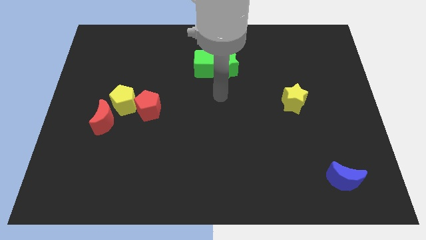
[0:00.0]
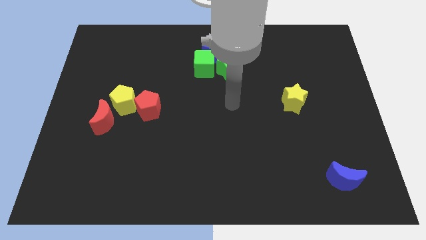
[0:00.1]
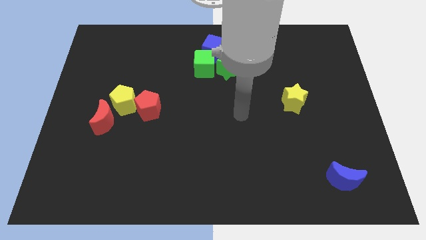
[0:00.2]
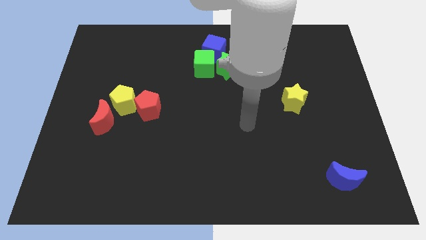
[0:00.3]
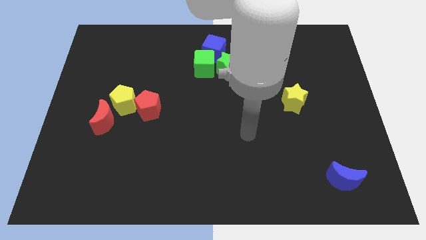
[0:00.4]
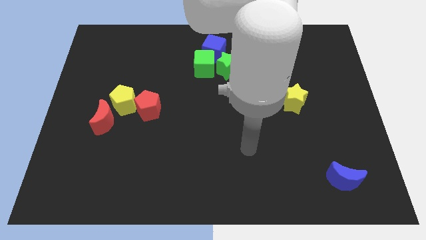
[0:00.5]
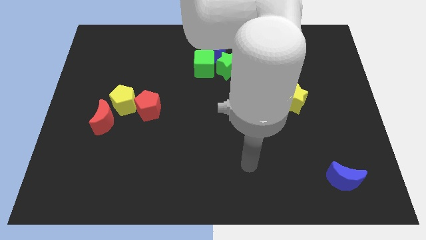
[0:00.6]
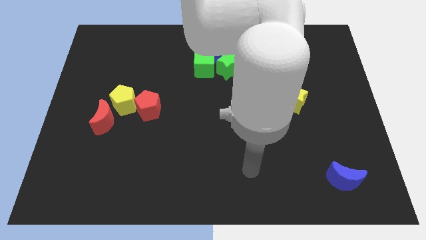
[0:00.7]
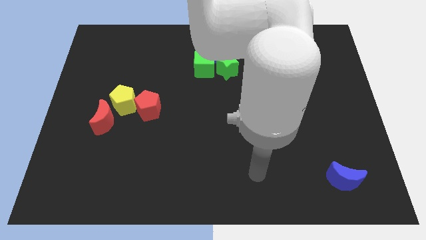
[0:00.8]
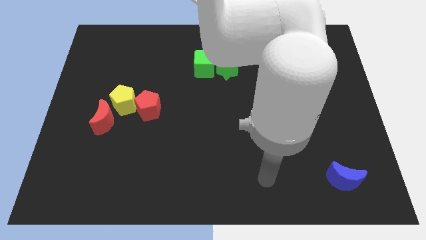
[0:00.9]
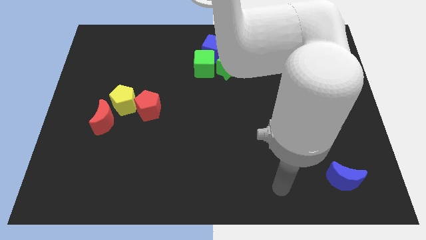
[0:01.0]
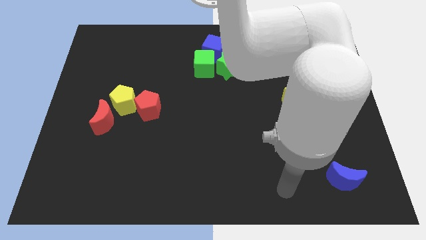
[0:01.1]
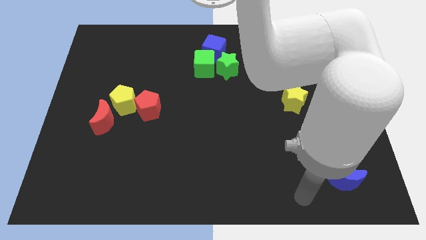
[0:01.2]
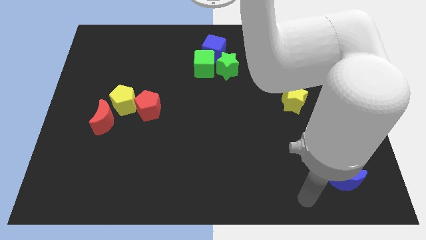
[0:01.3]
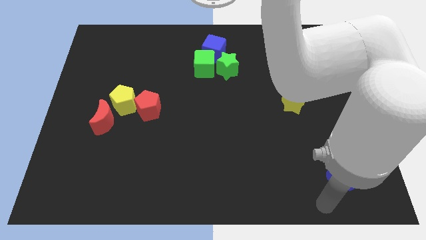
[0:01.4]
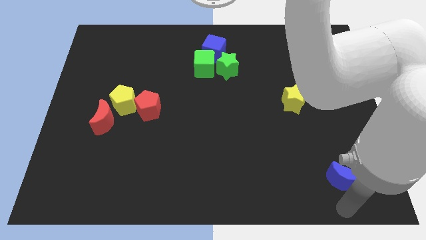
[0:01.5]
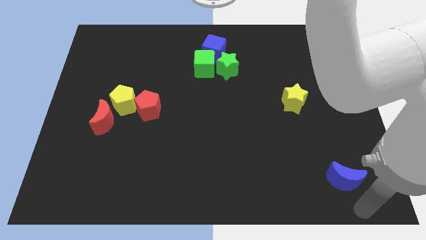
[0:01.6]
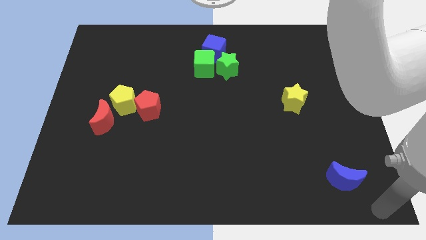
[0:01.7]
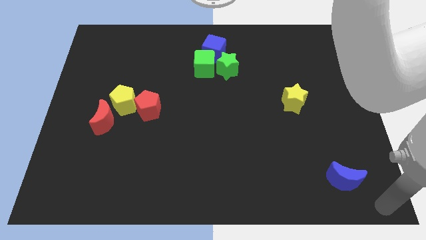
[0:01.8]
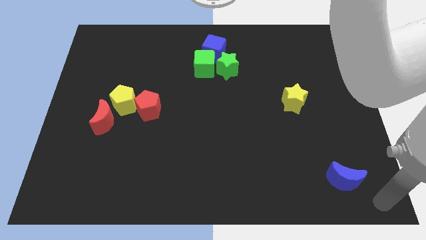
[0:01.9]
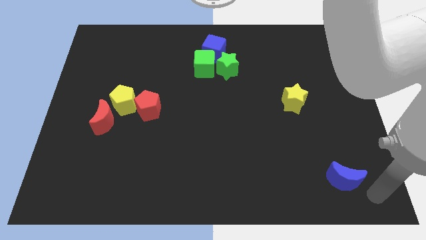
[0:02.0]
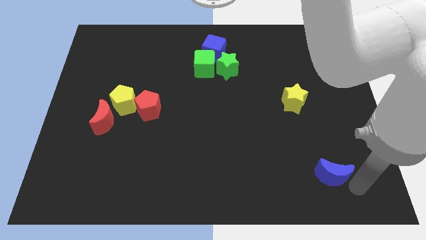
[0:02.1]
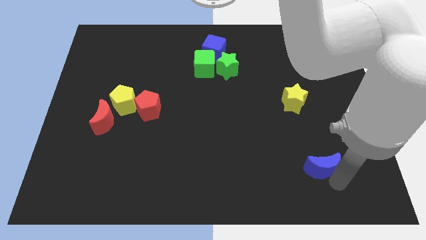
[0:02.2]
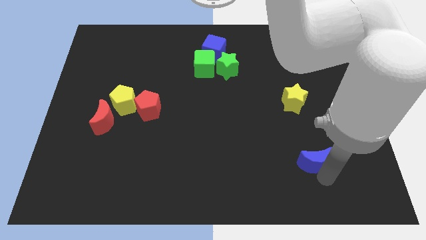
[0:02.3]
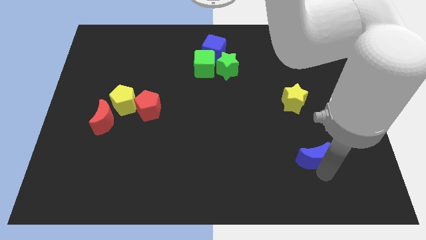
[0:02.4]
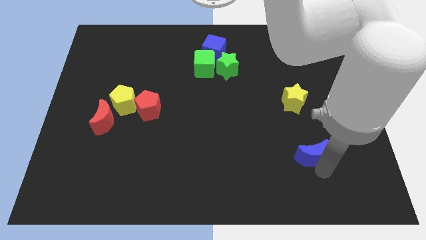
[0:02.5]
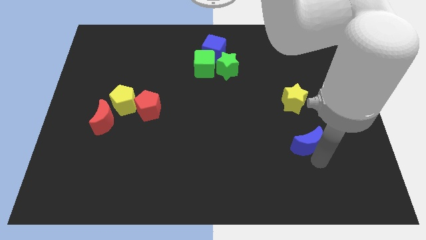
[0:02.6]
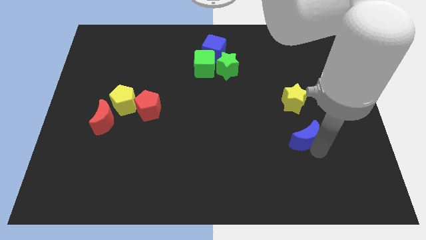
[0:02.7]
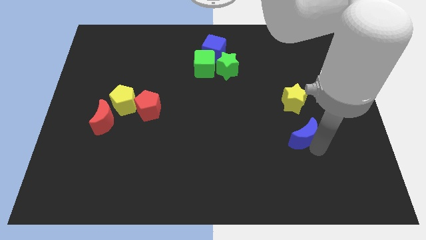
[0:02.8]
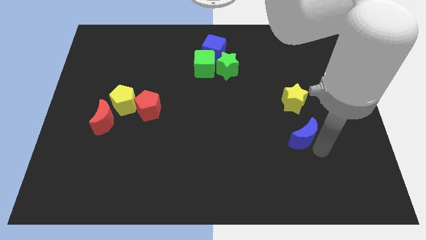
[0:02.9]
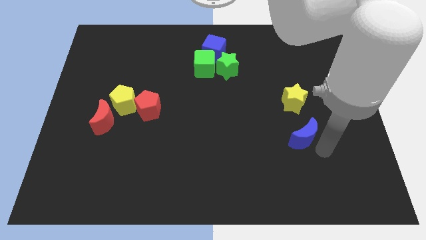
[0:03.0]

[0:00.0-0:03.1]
move the blue crescent to the bottom of the yellow star

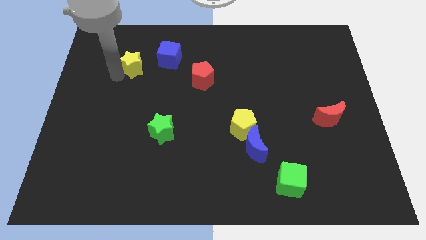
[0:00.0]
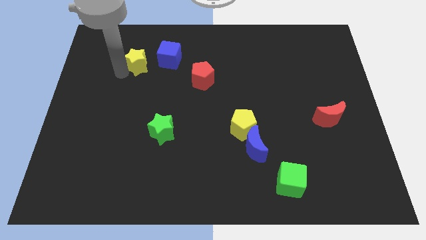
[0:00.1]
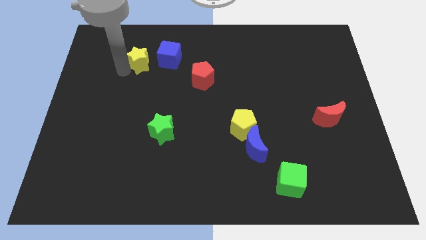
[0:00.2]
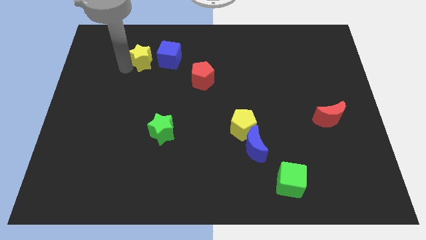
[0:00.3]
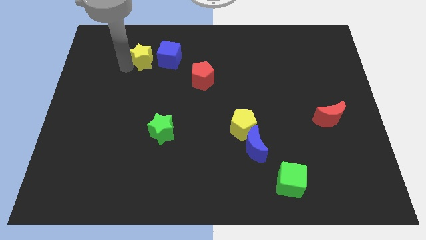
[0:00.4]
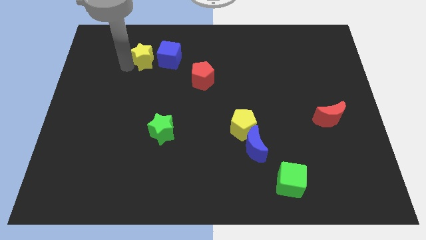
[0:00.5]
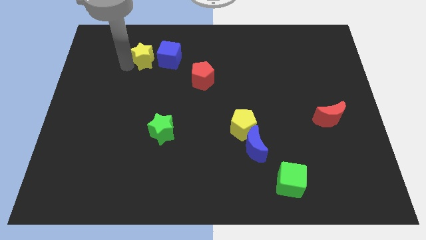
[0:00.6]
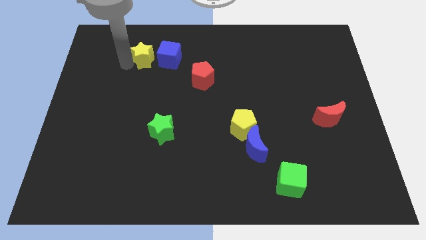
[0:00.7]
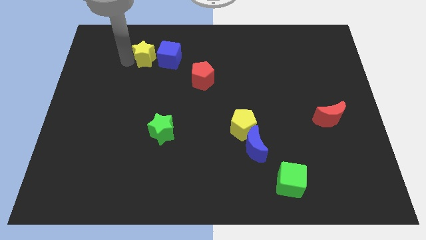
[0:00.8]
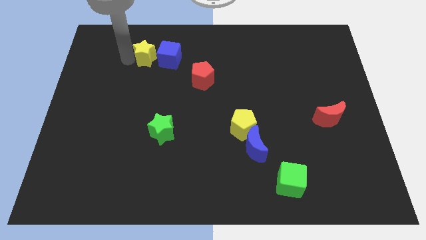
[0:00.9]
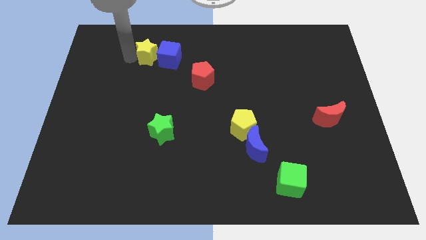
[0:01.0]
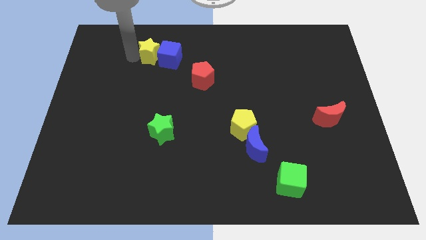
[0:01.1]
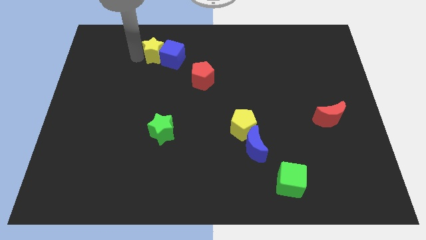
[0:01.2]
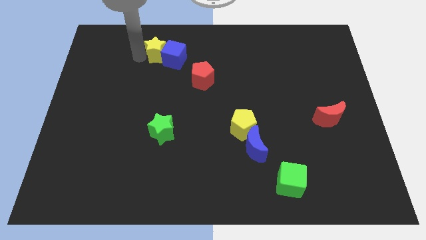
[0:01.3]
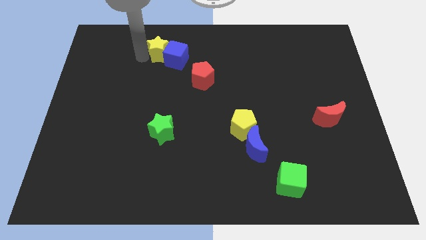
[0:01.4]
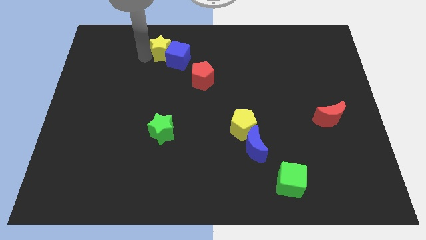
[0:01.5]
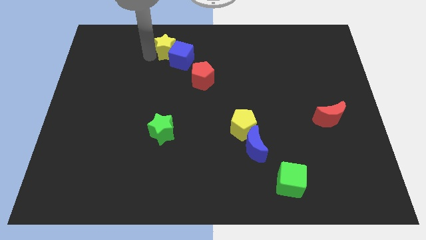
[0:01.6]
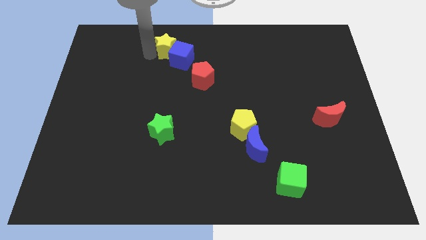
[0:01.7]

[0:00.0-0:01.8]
push the yellow star into the blue cube

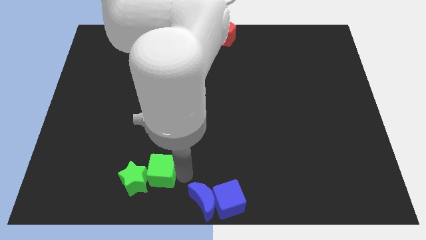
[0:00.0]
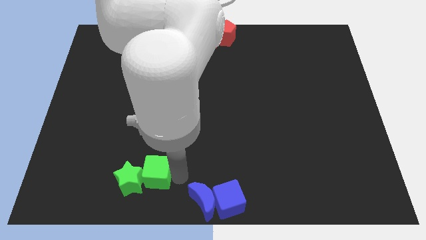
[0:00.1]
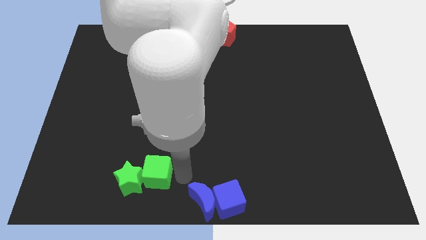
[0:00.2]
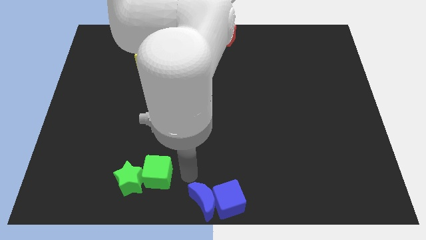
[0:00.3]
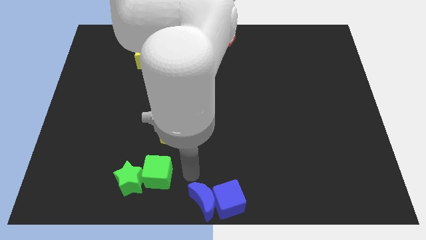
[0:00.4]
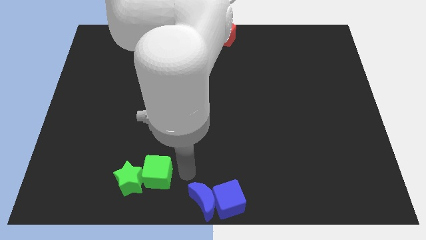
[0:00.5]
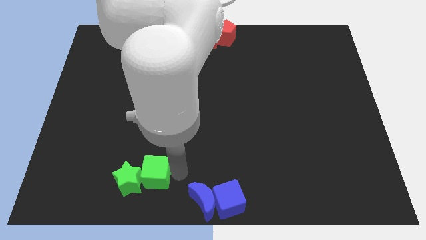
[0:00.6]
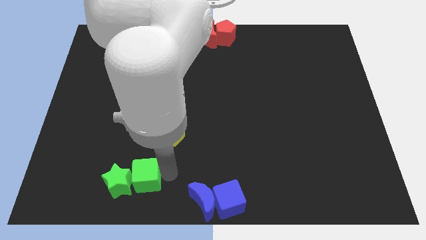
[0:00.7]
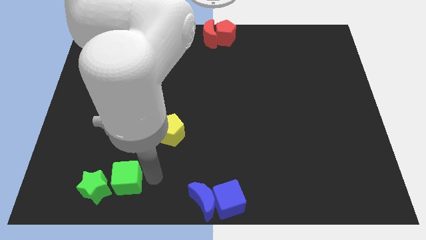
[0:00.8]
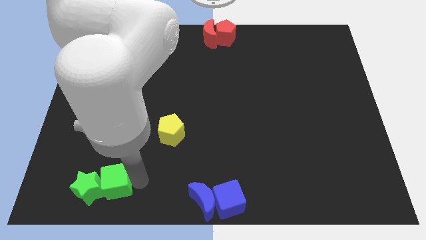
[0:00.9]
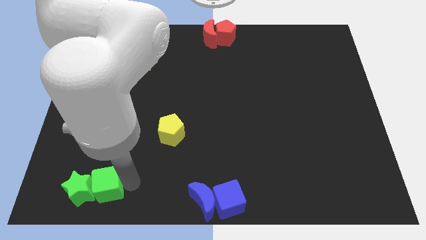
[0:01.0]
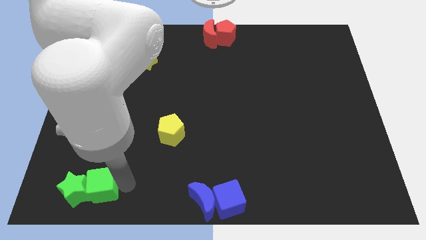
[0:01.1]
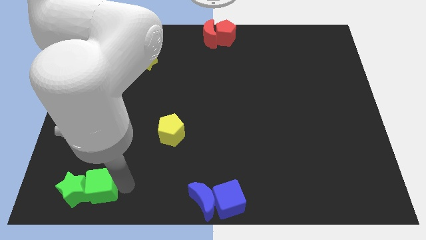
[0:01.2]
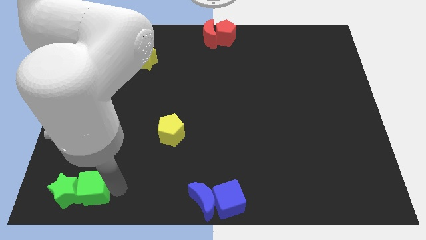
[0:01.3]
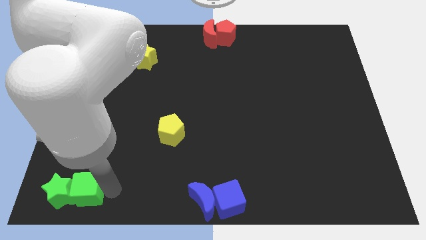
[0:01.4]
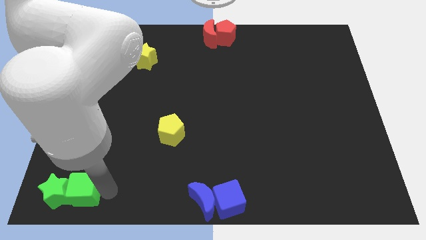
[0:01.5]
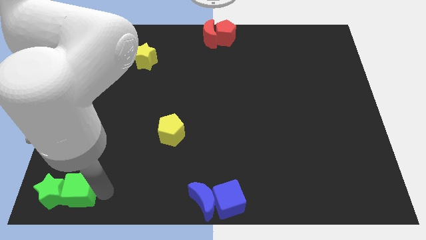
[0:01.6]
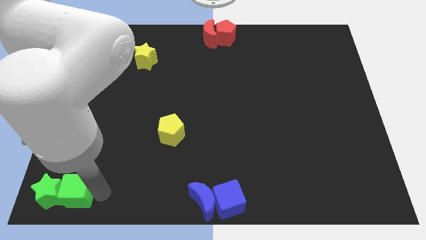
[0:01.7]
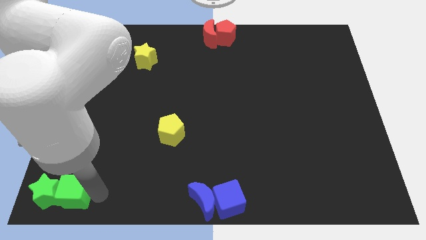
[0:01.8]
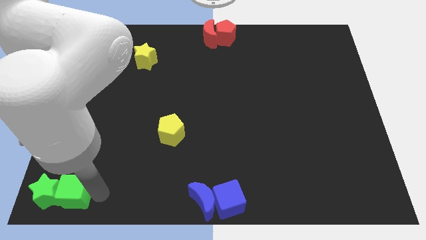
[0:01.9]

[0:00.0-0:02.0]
place green star and green cube to the bottom left

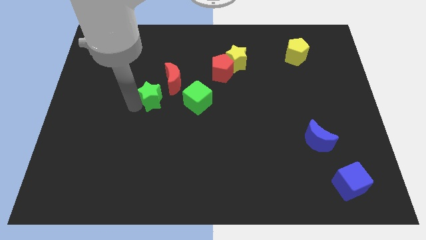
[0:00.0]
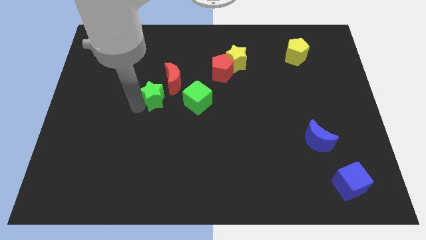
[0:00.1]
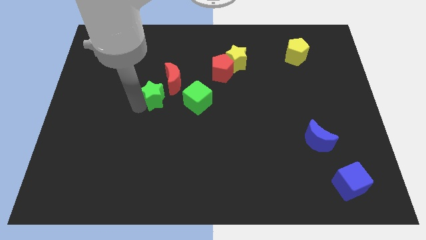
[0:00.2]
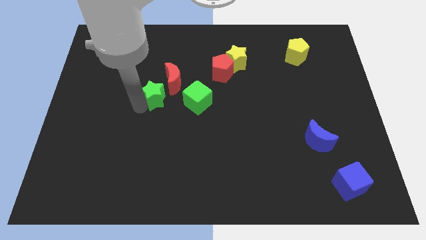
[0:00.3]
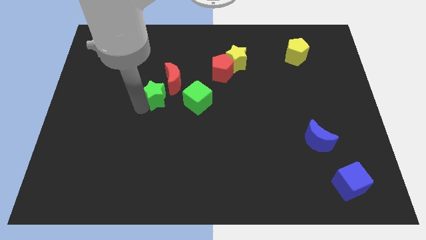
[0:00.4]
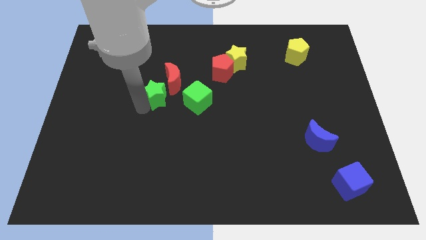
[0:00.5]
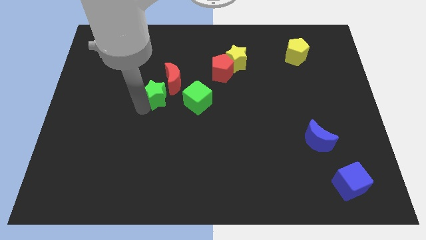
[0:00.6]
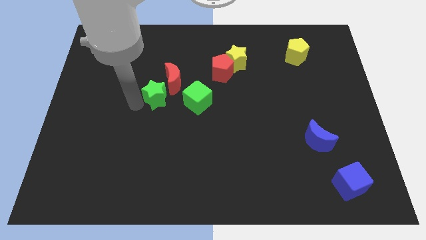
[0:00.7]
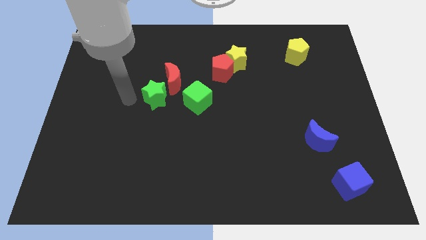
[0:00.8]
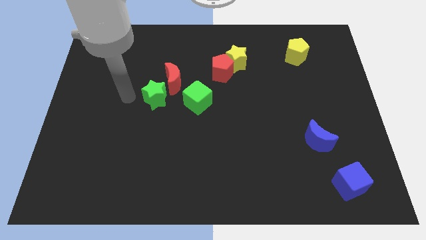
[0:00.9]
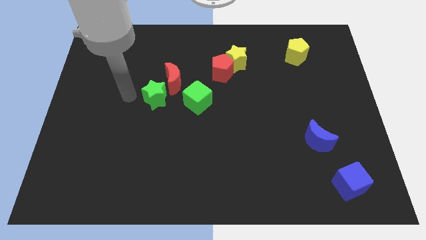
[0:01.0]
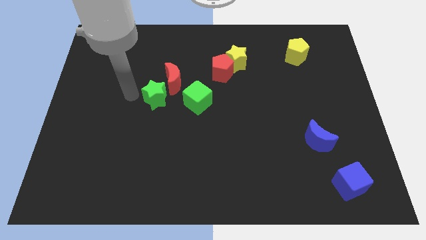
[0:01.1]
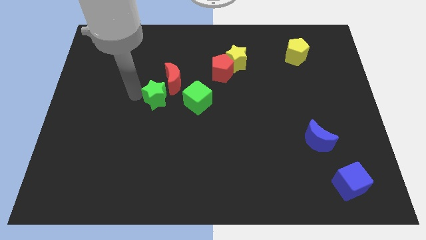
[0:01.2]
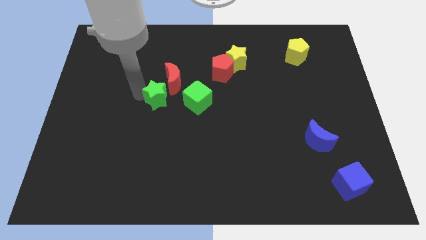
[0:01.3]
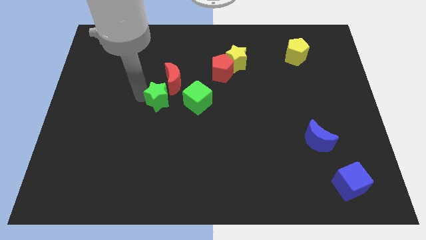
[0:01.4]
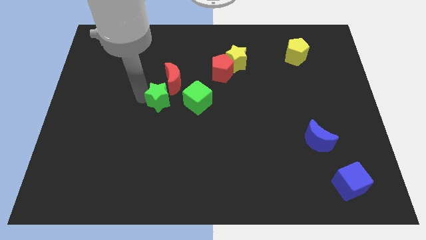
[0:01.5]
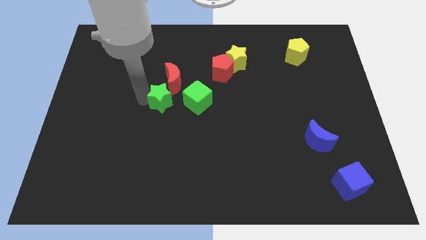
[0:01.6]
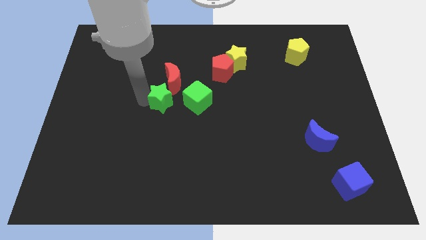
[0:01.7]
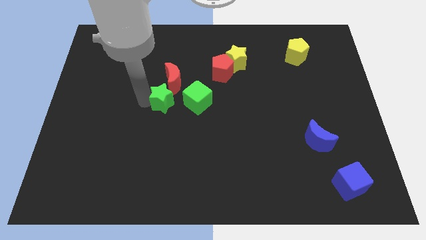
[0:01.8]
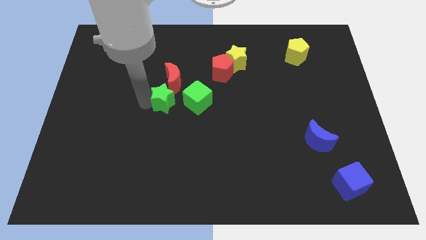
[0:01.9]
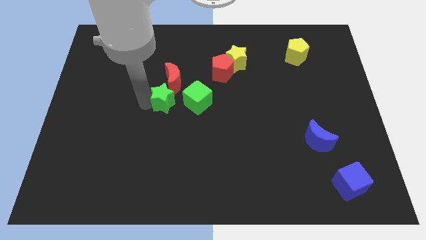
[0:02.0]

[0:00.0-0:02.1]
move the green star left to the green cube
